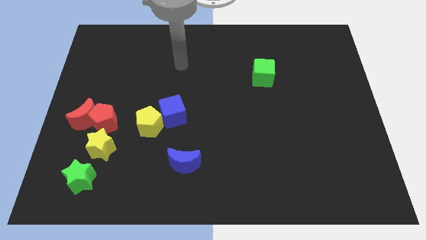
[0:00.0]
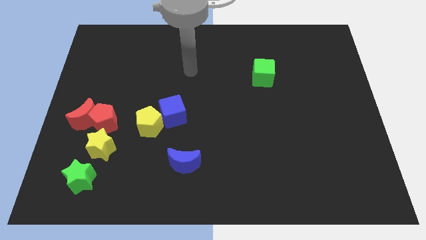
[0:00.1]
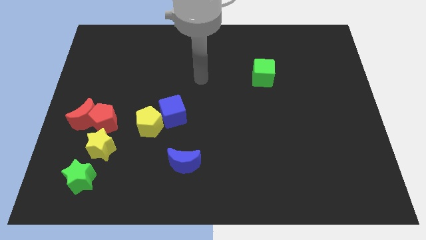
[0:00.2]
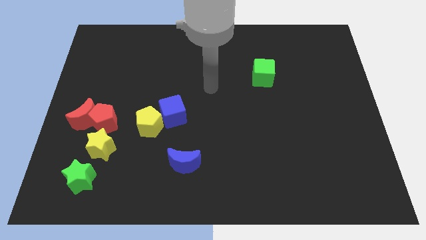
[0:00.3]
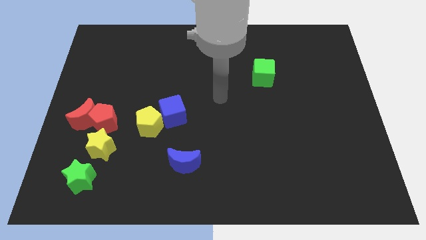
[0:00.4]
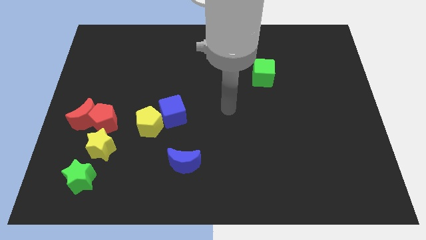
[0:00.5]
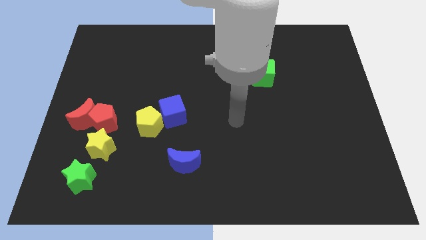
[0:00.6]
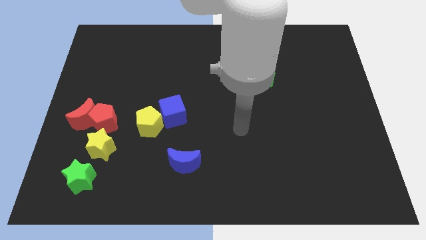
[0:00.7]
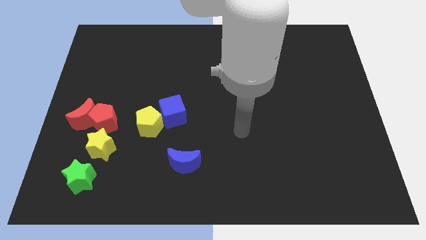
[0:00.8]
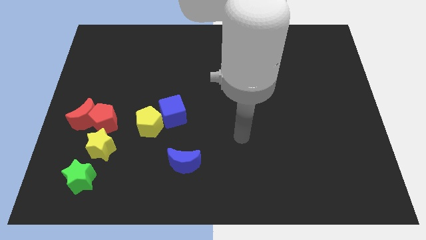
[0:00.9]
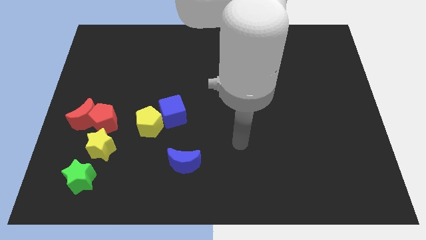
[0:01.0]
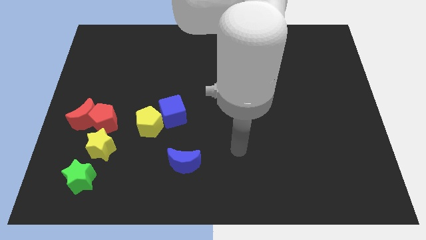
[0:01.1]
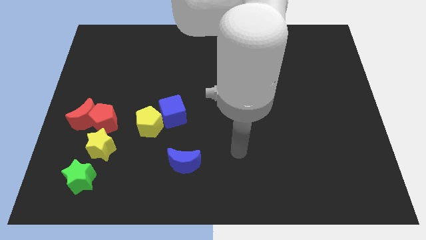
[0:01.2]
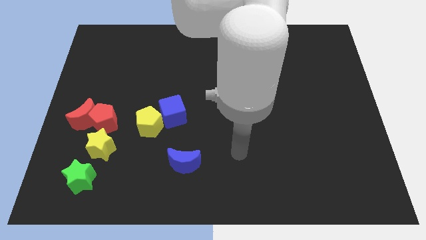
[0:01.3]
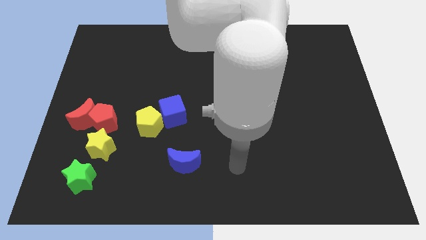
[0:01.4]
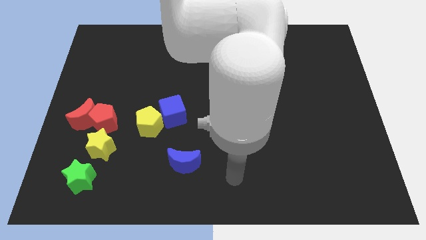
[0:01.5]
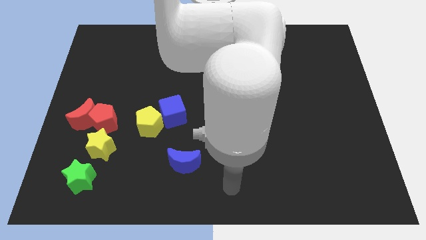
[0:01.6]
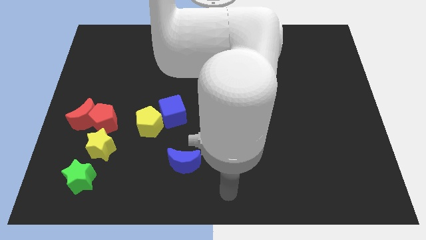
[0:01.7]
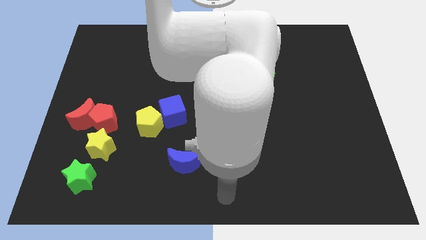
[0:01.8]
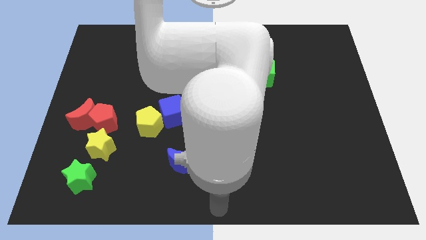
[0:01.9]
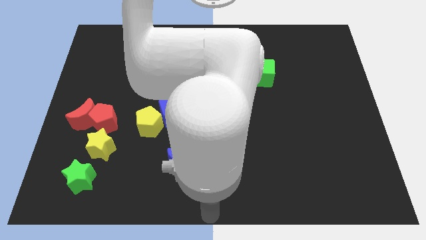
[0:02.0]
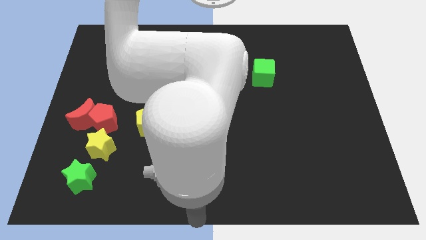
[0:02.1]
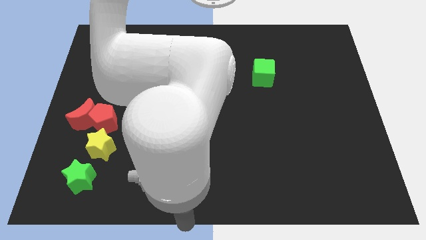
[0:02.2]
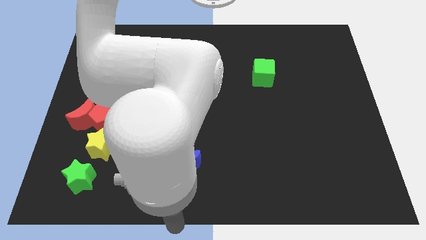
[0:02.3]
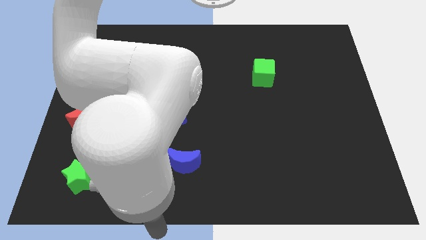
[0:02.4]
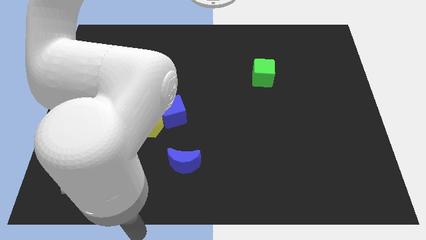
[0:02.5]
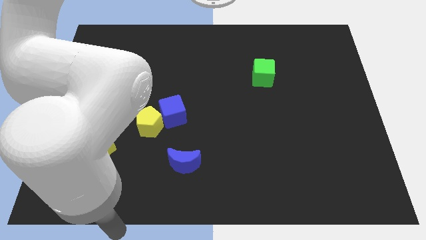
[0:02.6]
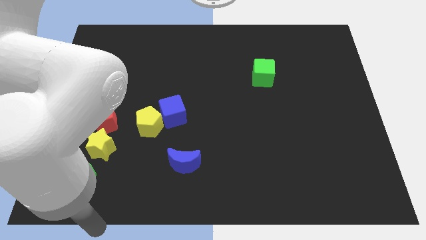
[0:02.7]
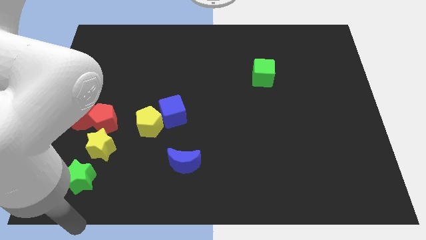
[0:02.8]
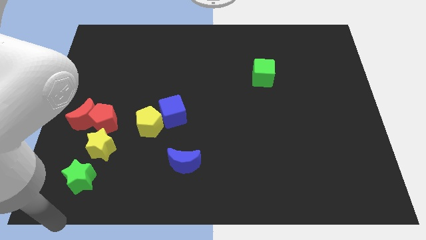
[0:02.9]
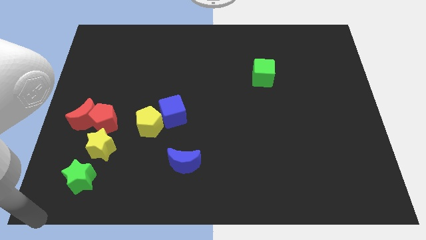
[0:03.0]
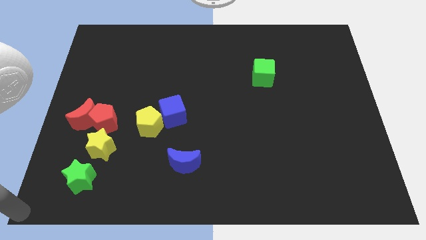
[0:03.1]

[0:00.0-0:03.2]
point your arm at the bottom left corner of the board

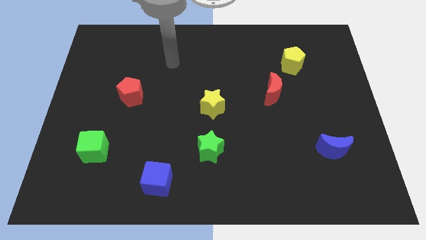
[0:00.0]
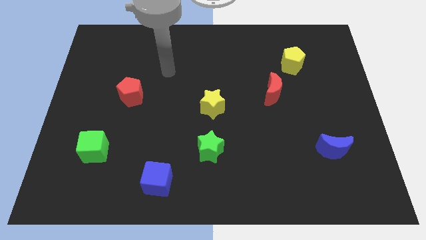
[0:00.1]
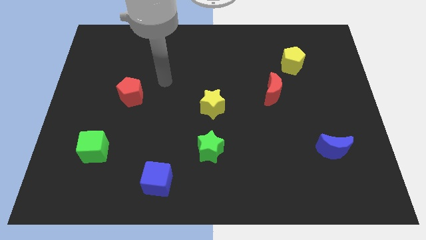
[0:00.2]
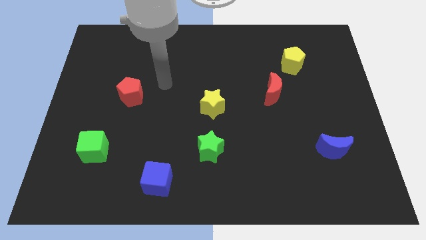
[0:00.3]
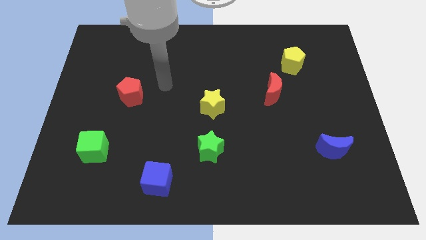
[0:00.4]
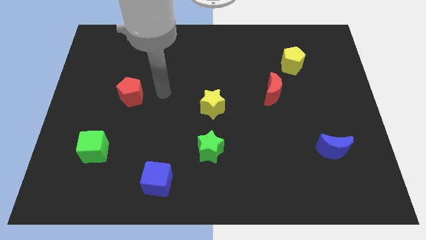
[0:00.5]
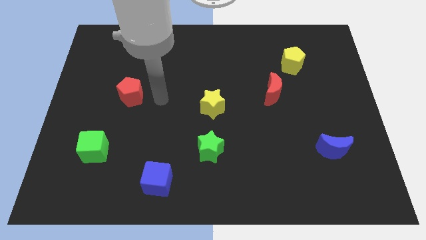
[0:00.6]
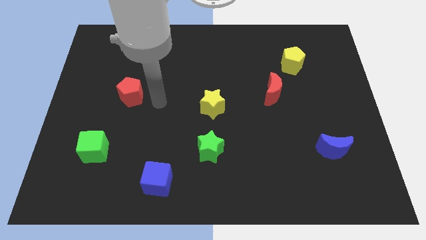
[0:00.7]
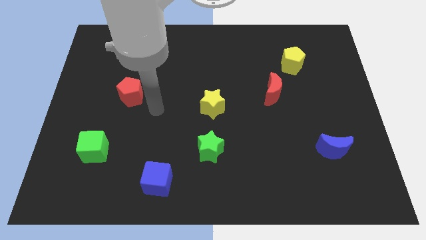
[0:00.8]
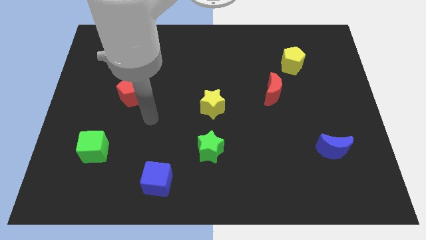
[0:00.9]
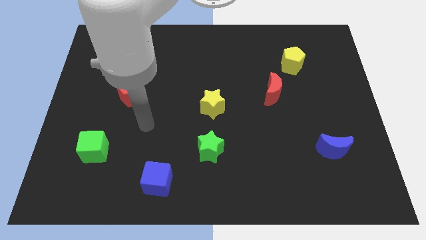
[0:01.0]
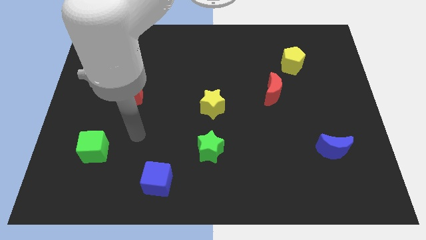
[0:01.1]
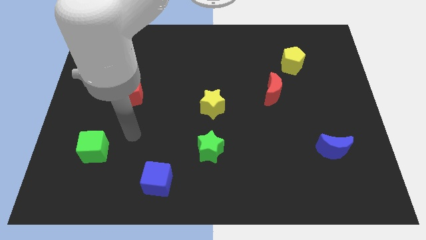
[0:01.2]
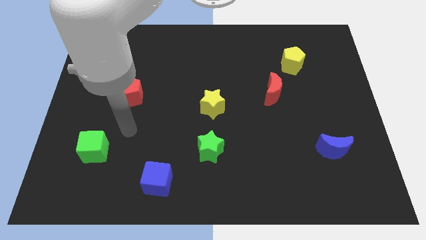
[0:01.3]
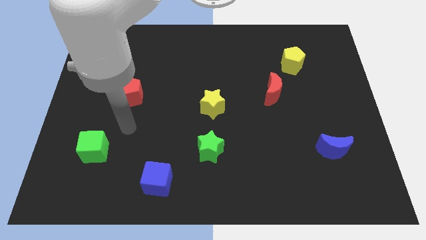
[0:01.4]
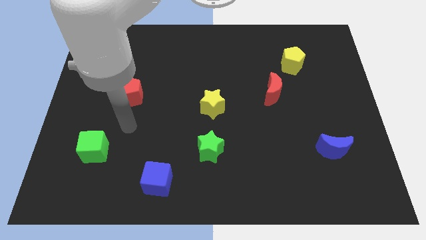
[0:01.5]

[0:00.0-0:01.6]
point your arm at the bottom of the red pentagon

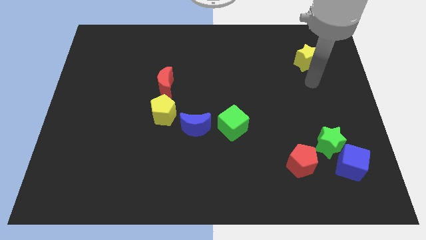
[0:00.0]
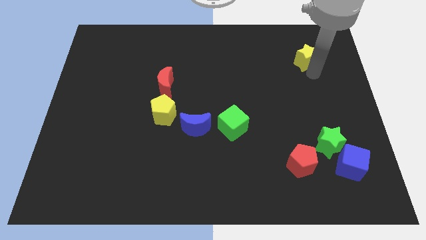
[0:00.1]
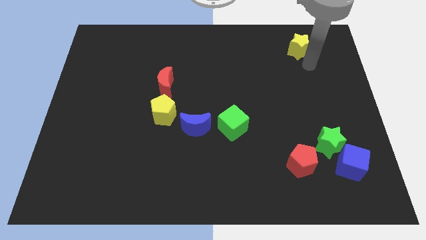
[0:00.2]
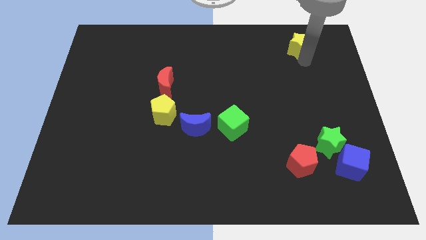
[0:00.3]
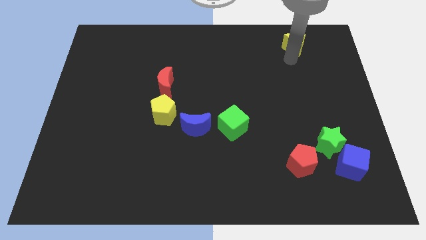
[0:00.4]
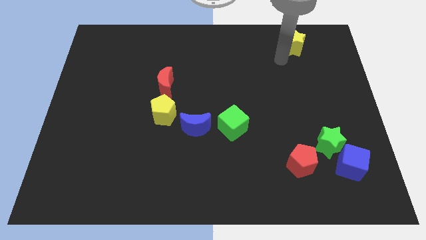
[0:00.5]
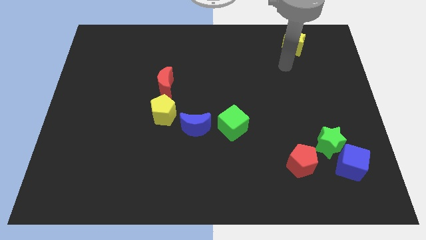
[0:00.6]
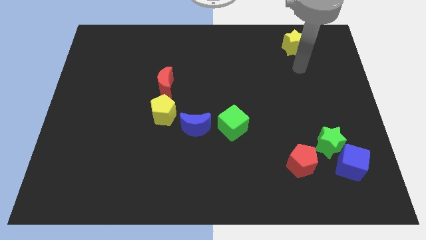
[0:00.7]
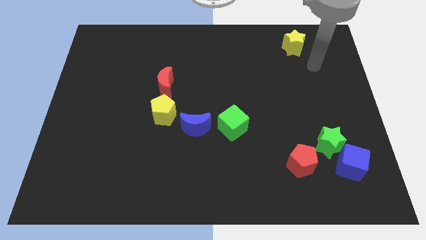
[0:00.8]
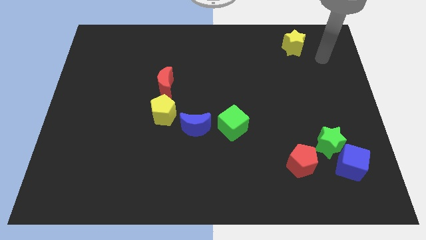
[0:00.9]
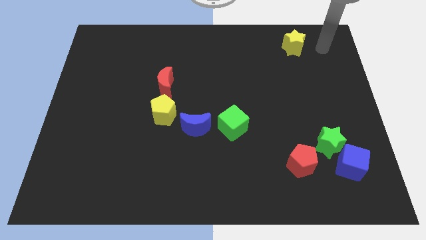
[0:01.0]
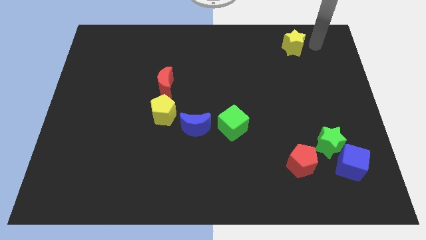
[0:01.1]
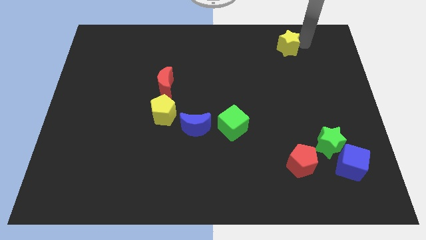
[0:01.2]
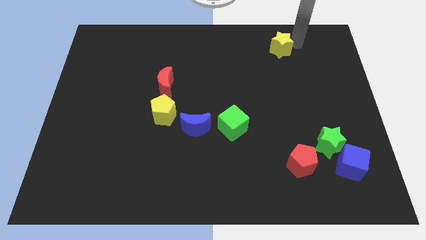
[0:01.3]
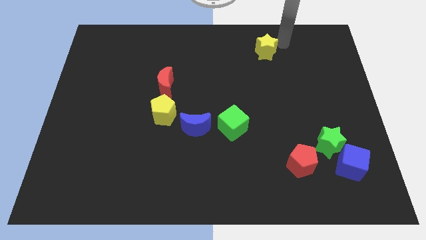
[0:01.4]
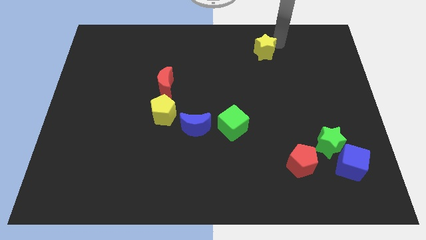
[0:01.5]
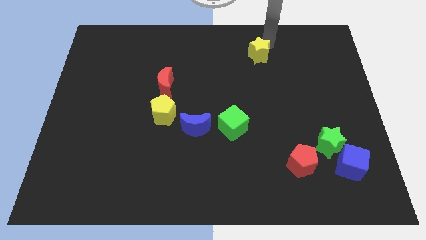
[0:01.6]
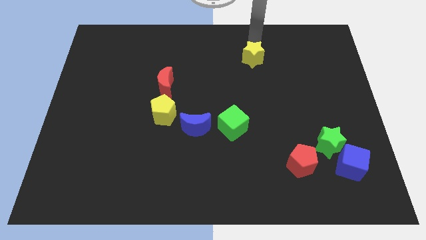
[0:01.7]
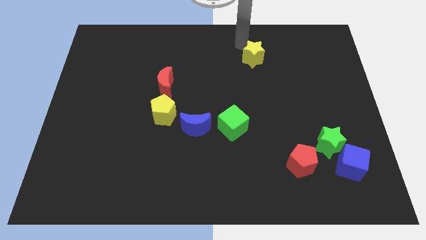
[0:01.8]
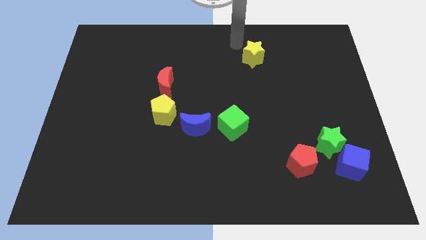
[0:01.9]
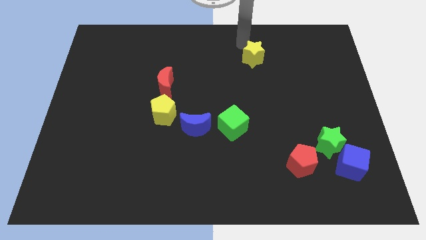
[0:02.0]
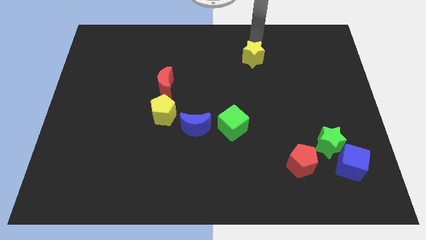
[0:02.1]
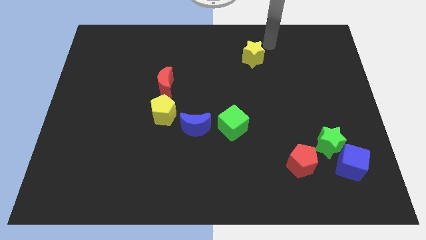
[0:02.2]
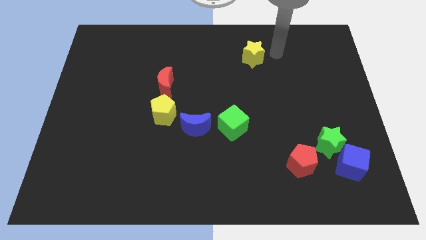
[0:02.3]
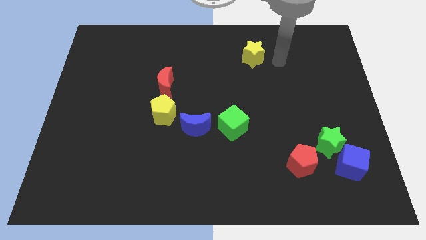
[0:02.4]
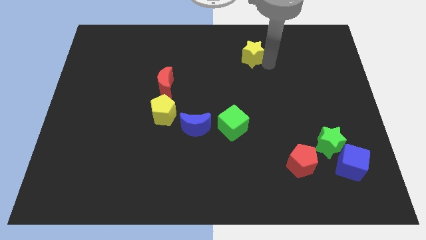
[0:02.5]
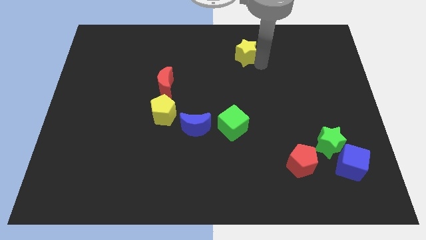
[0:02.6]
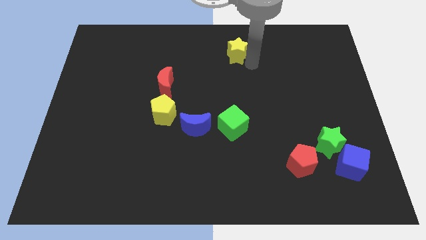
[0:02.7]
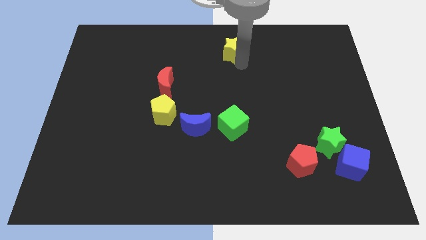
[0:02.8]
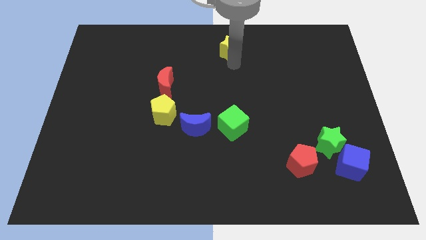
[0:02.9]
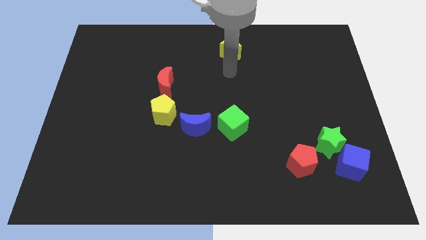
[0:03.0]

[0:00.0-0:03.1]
drag yellow pentagon towards top middle of the board

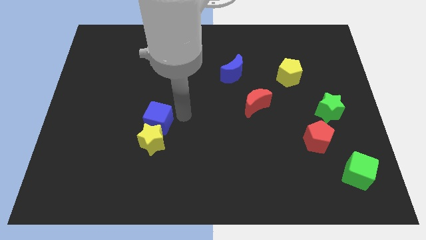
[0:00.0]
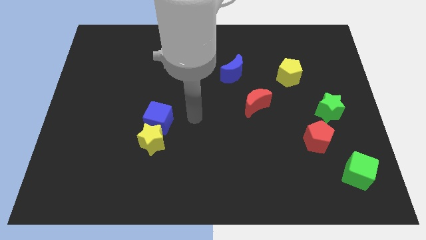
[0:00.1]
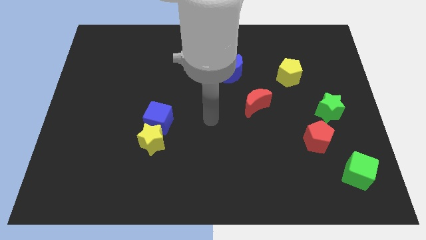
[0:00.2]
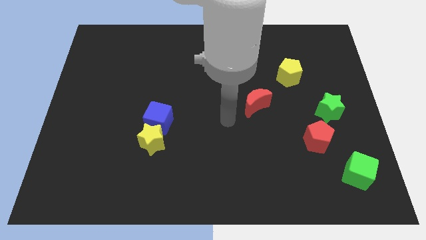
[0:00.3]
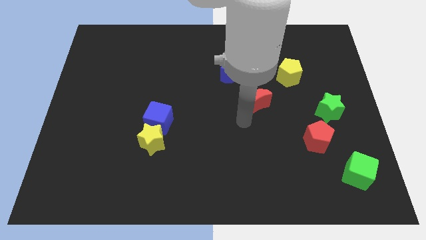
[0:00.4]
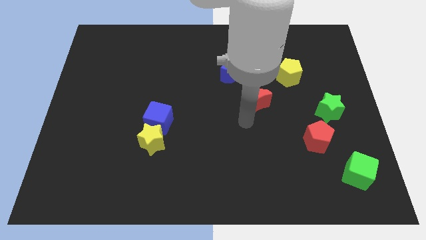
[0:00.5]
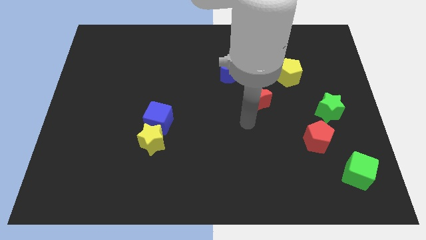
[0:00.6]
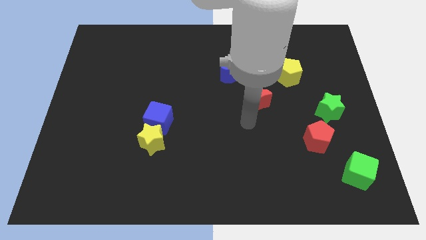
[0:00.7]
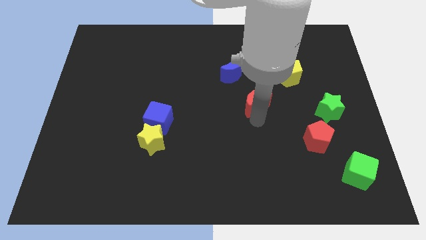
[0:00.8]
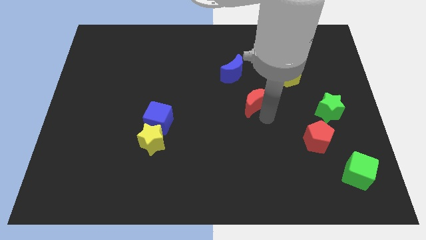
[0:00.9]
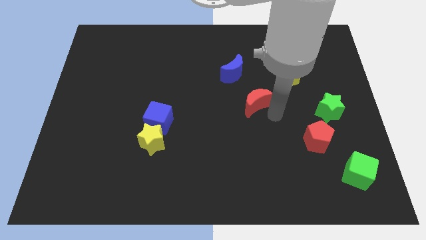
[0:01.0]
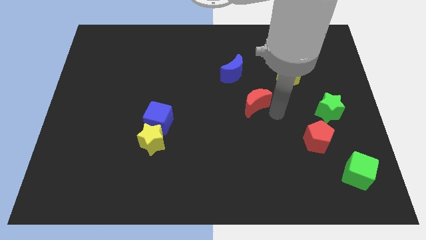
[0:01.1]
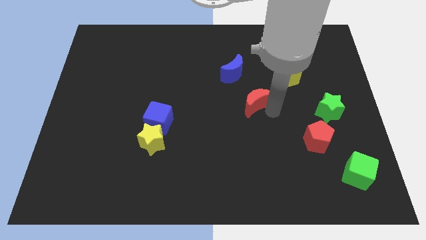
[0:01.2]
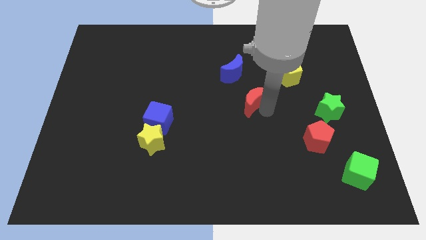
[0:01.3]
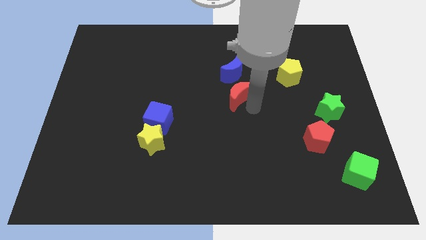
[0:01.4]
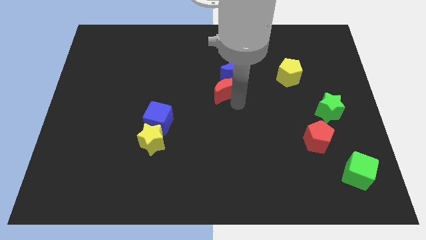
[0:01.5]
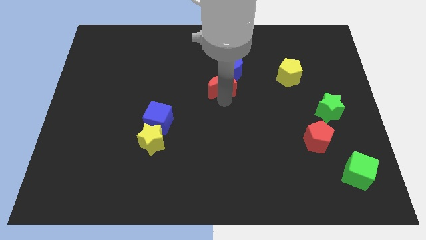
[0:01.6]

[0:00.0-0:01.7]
move the red crescent to the bottom of the blue crescent
